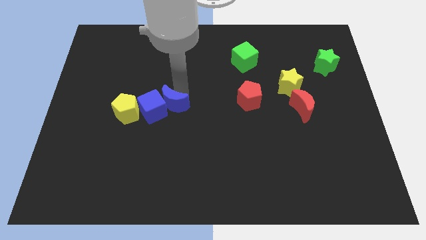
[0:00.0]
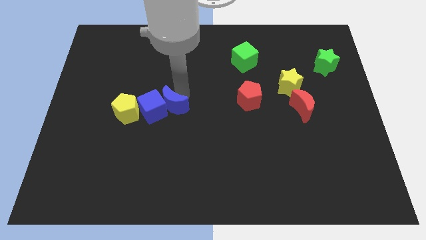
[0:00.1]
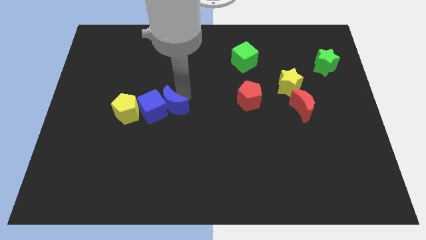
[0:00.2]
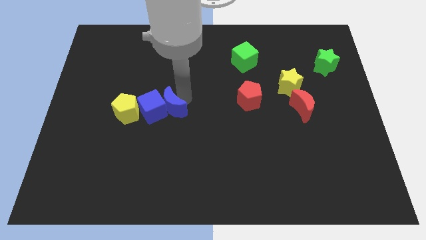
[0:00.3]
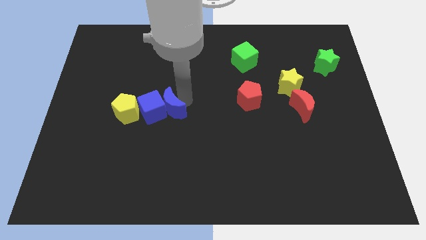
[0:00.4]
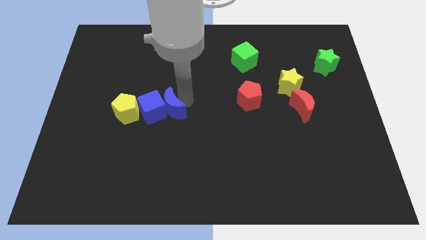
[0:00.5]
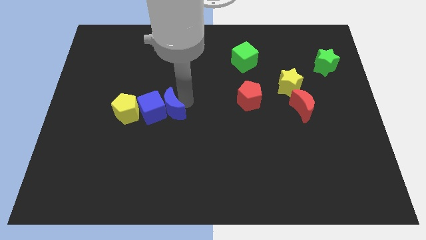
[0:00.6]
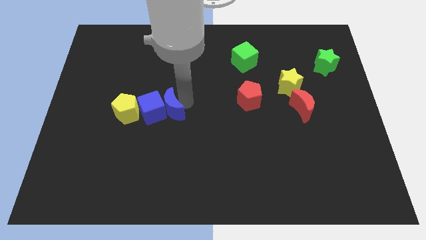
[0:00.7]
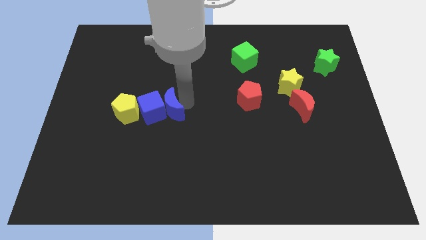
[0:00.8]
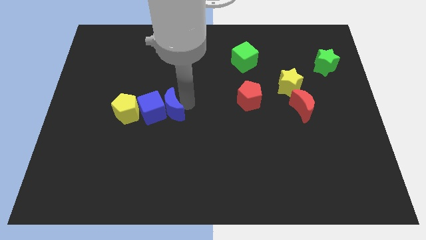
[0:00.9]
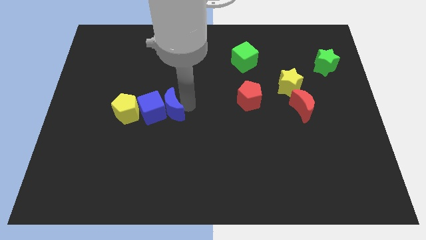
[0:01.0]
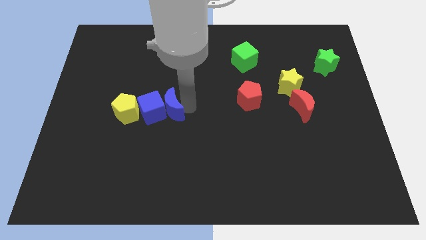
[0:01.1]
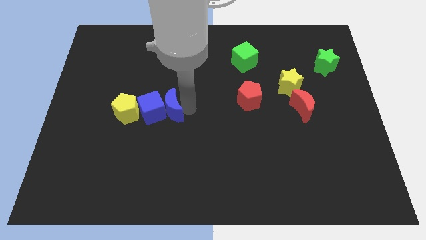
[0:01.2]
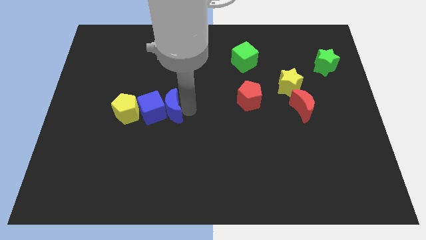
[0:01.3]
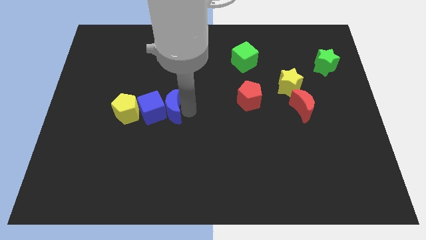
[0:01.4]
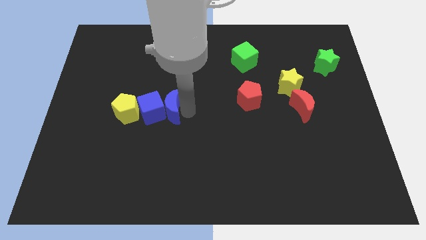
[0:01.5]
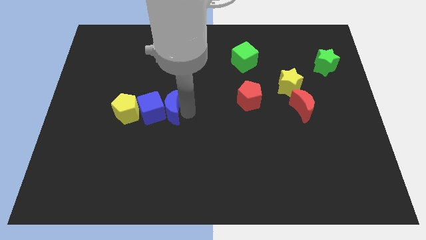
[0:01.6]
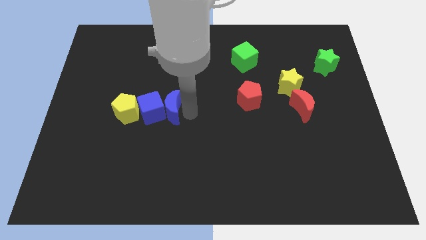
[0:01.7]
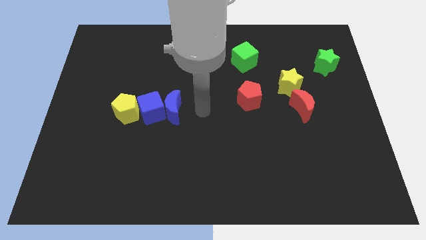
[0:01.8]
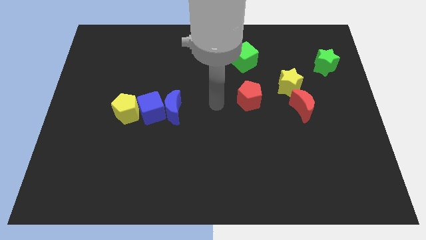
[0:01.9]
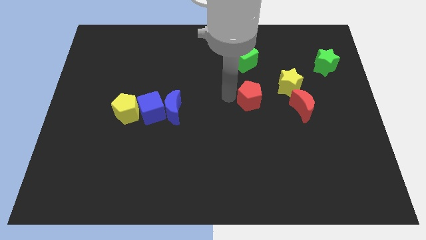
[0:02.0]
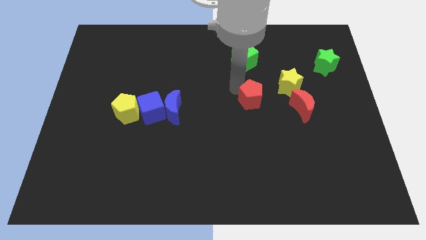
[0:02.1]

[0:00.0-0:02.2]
move the arm near the red pentagon

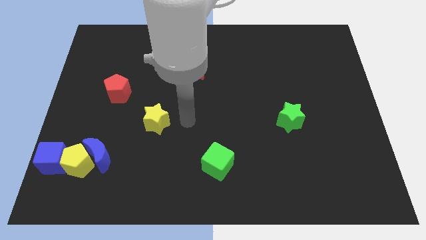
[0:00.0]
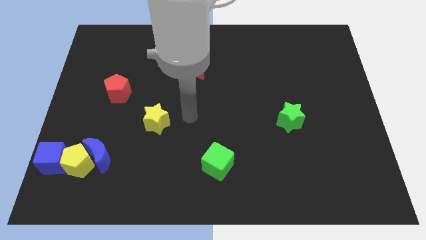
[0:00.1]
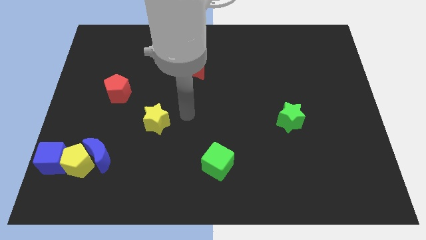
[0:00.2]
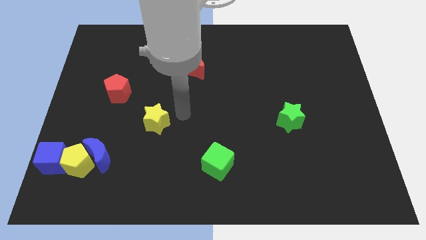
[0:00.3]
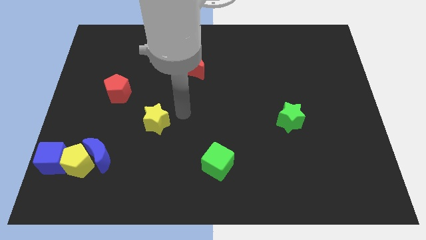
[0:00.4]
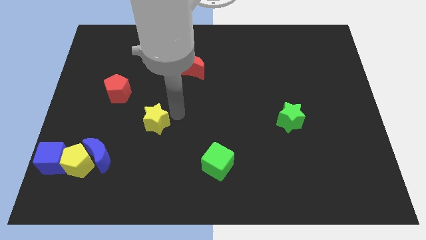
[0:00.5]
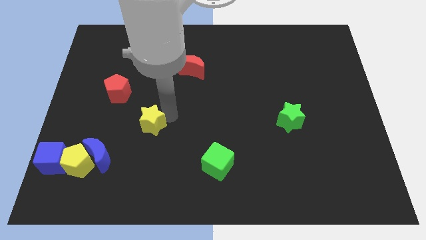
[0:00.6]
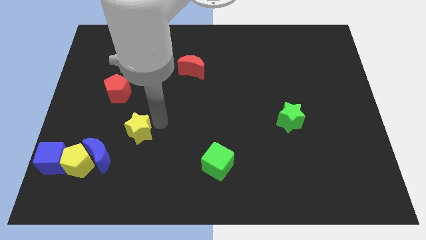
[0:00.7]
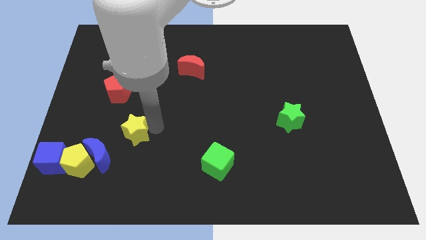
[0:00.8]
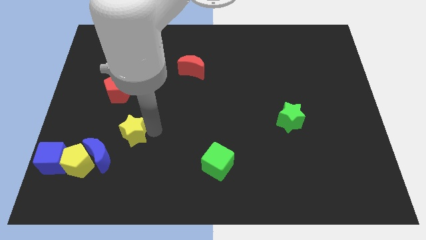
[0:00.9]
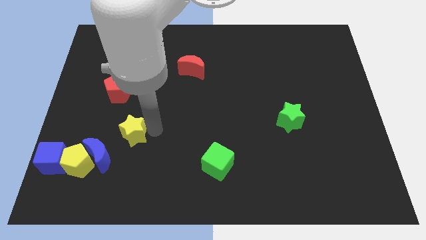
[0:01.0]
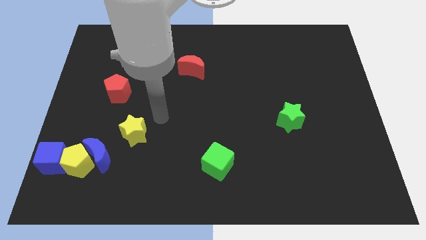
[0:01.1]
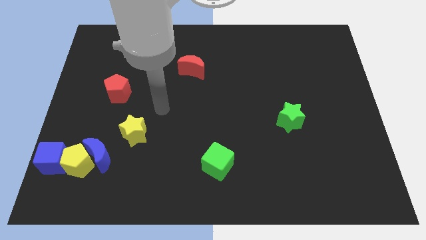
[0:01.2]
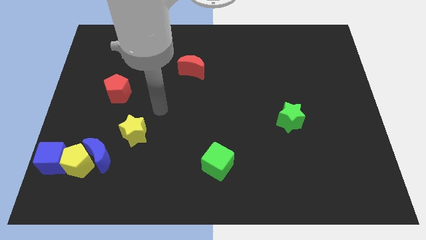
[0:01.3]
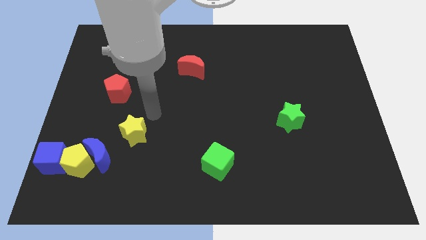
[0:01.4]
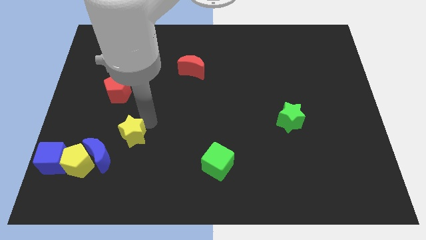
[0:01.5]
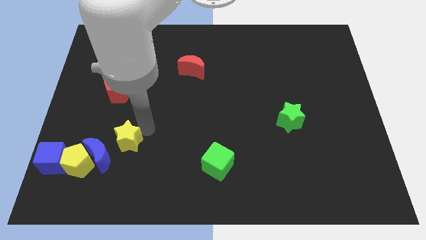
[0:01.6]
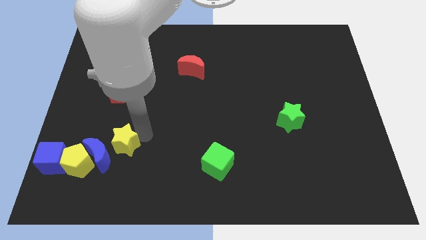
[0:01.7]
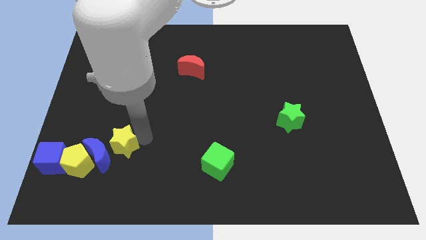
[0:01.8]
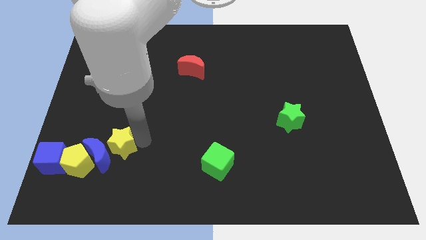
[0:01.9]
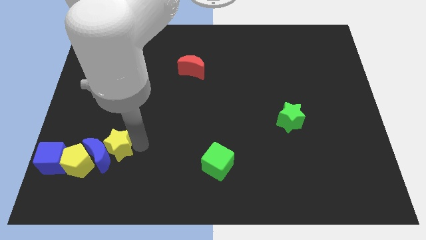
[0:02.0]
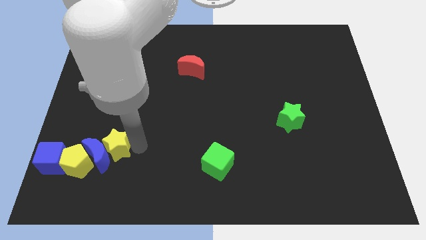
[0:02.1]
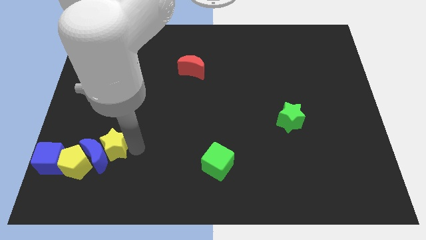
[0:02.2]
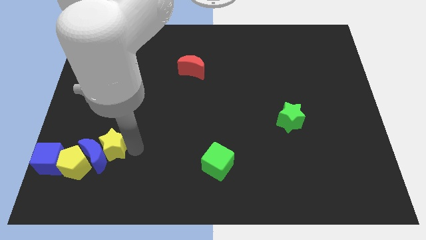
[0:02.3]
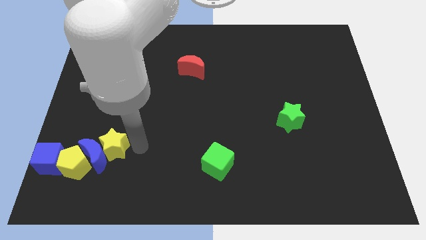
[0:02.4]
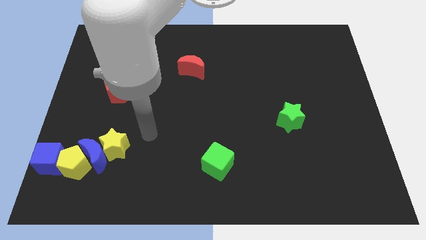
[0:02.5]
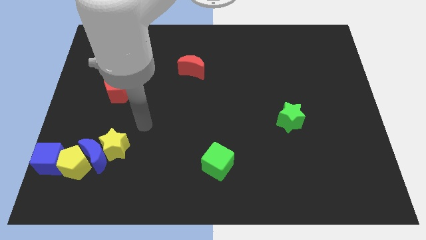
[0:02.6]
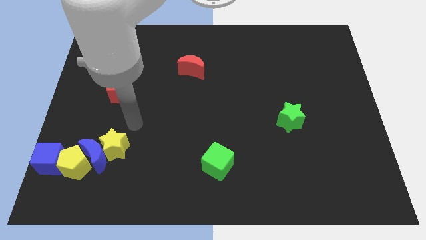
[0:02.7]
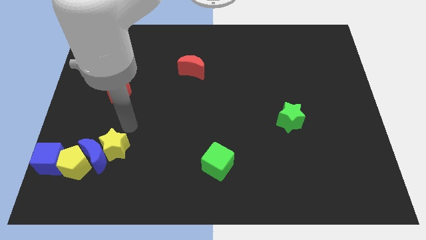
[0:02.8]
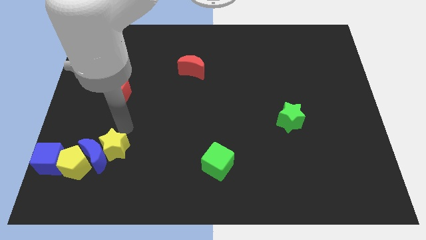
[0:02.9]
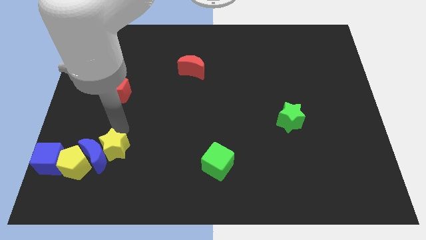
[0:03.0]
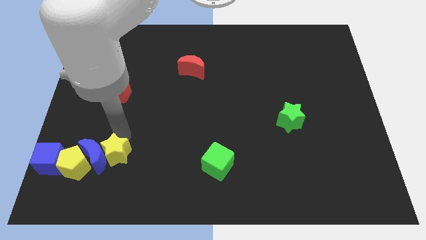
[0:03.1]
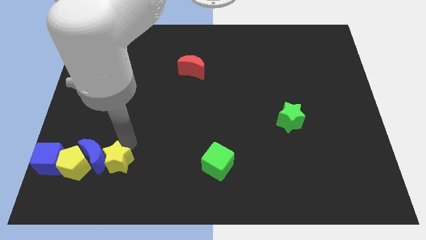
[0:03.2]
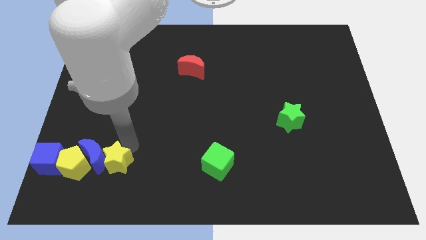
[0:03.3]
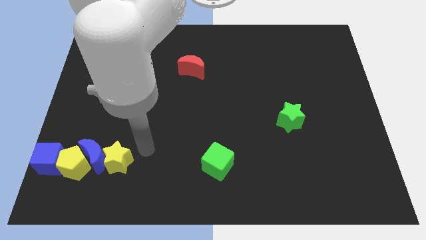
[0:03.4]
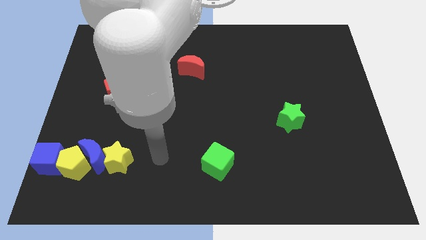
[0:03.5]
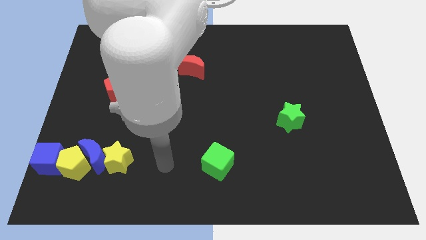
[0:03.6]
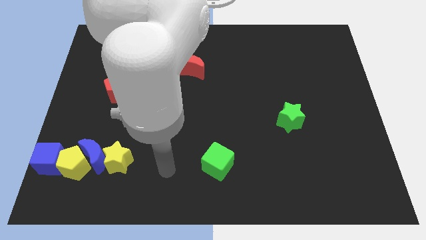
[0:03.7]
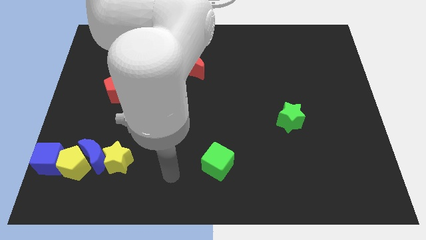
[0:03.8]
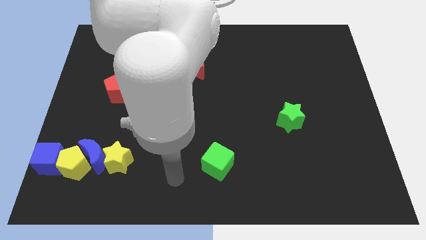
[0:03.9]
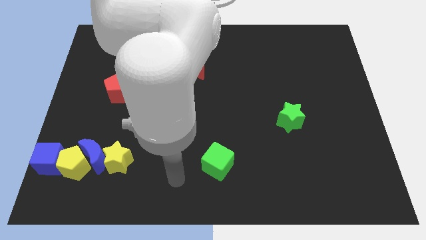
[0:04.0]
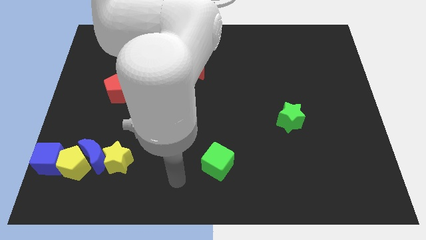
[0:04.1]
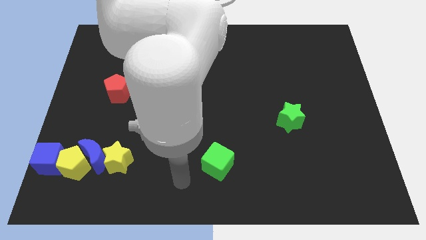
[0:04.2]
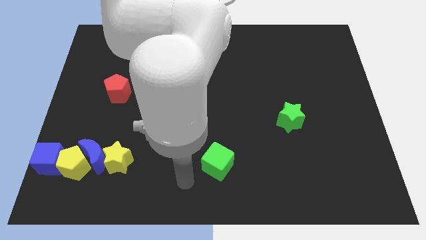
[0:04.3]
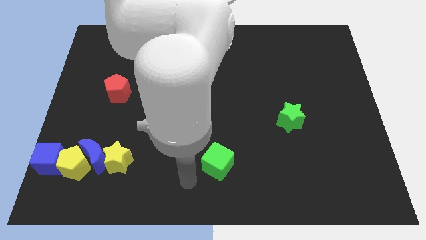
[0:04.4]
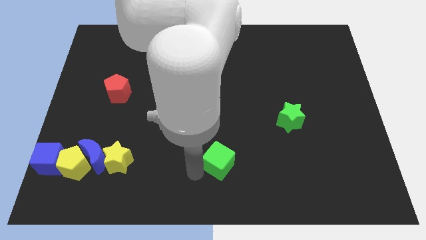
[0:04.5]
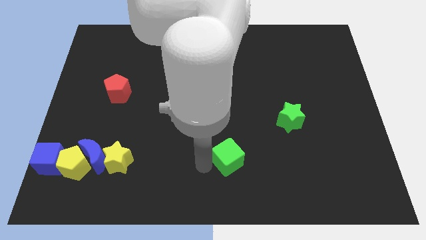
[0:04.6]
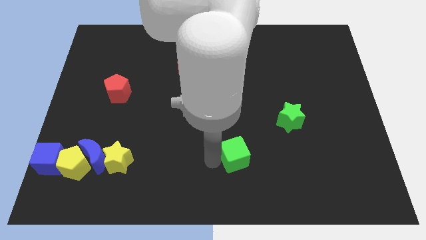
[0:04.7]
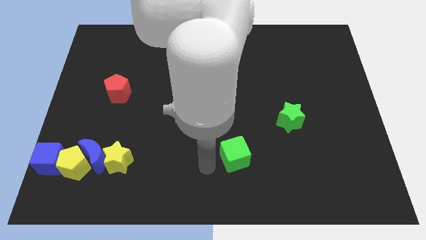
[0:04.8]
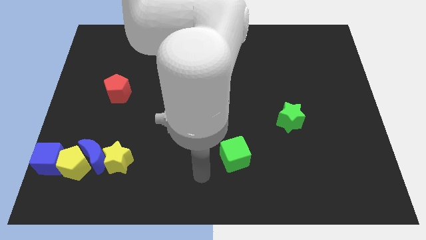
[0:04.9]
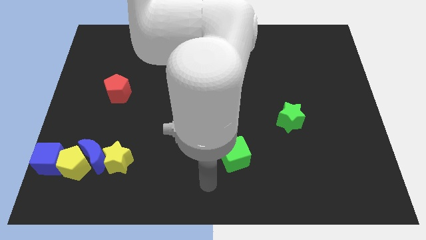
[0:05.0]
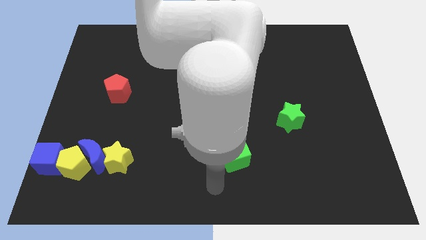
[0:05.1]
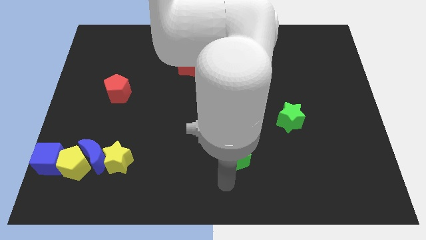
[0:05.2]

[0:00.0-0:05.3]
push the yellow star into the blue moon

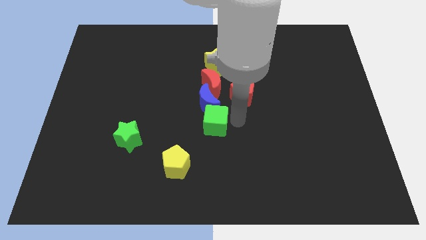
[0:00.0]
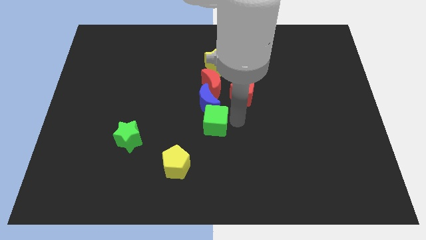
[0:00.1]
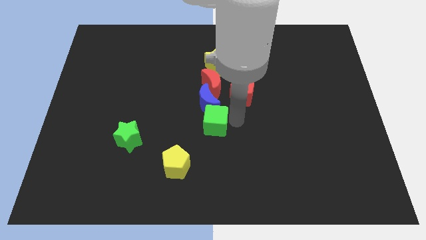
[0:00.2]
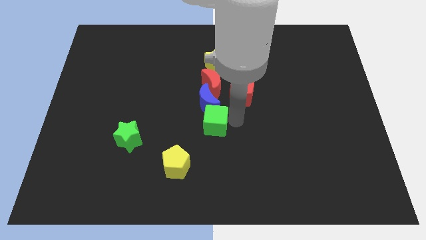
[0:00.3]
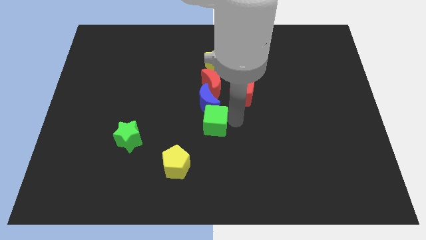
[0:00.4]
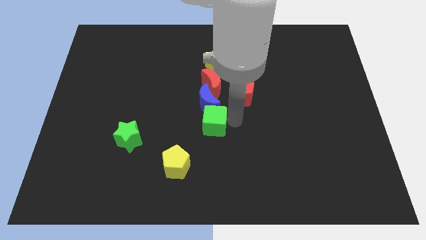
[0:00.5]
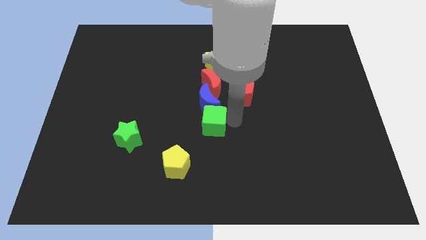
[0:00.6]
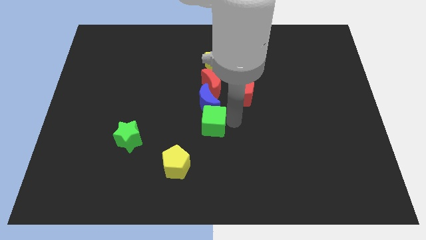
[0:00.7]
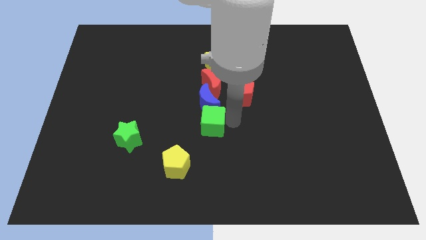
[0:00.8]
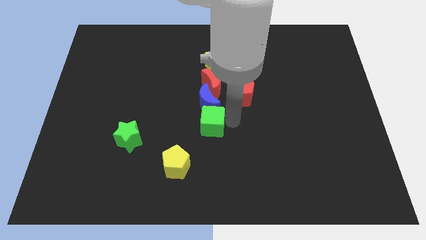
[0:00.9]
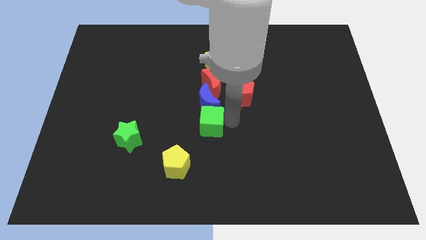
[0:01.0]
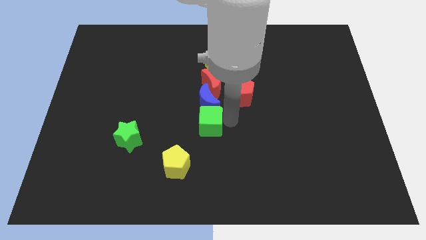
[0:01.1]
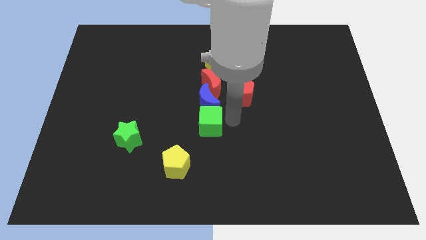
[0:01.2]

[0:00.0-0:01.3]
adjust the green cube at the bottom of blue moon

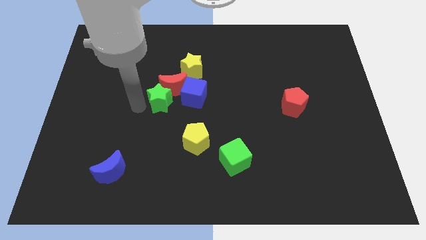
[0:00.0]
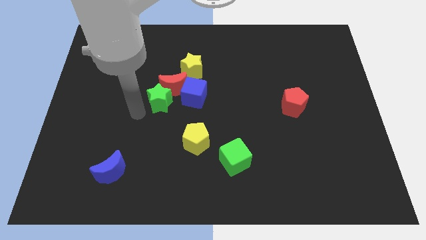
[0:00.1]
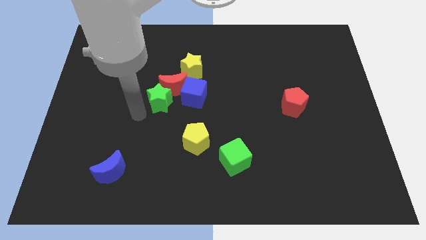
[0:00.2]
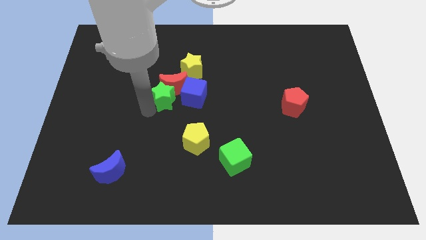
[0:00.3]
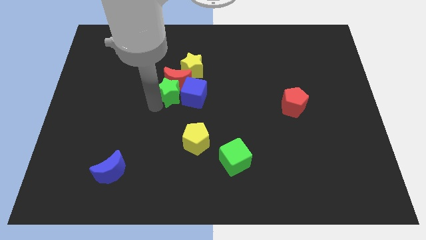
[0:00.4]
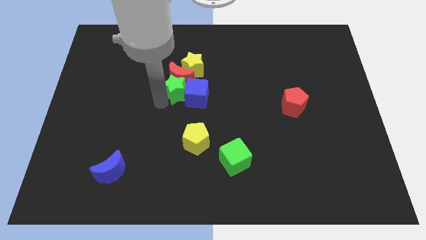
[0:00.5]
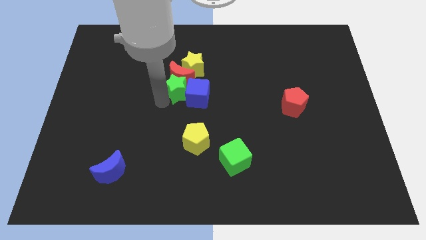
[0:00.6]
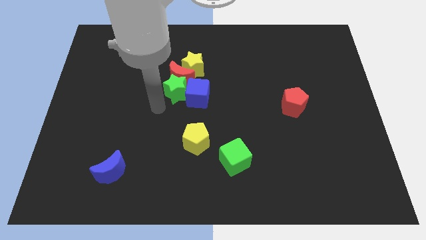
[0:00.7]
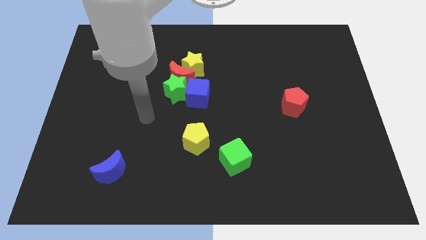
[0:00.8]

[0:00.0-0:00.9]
move the green star into the red moon
